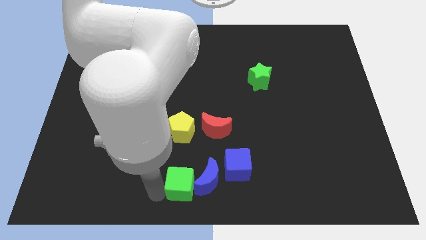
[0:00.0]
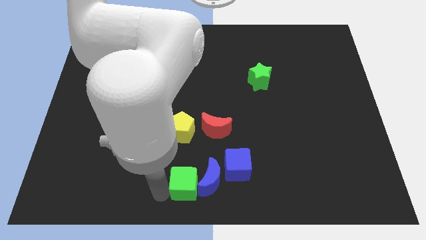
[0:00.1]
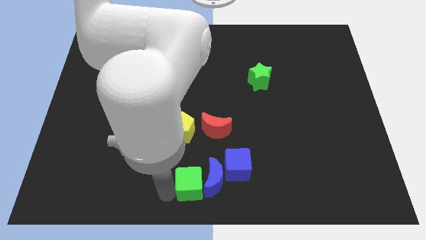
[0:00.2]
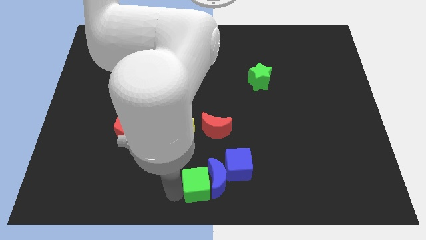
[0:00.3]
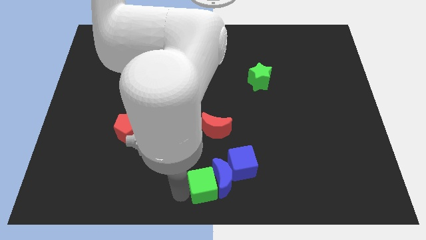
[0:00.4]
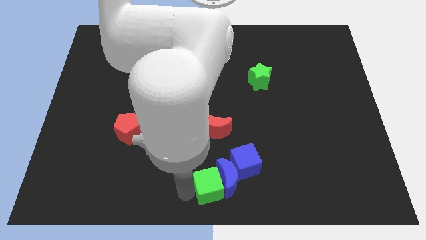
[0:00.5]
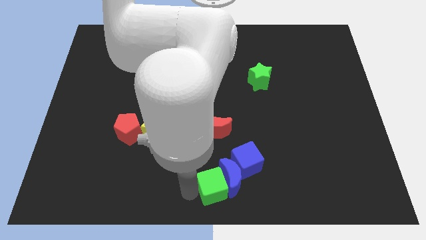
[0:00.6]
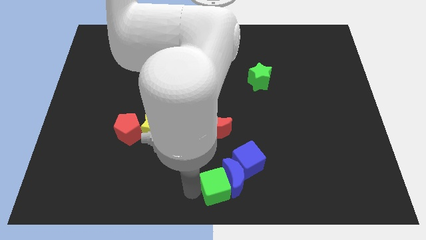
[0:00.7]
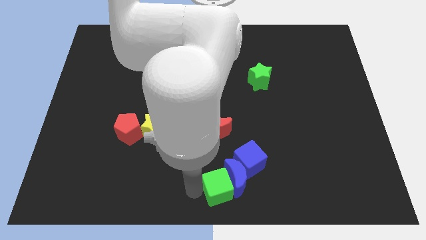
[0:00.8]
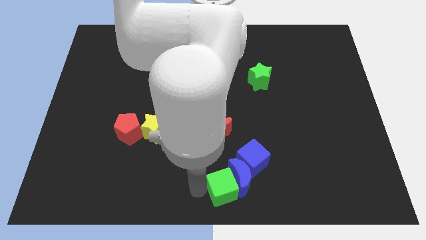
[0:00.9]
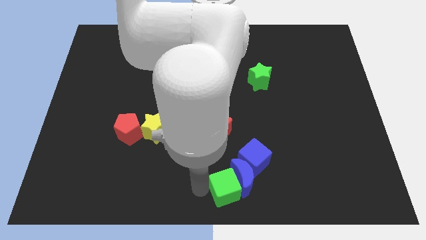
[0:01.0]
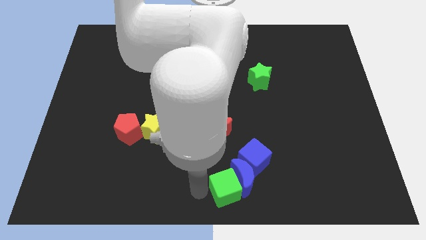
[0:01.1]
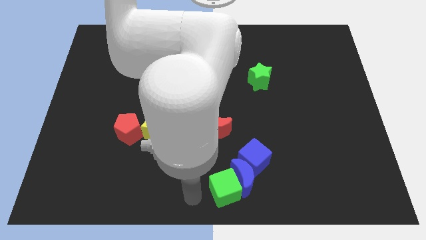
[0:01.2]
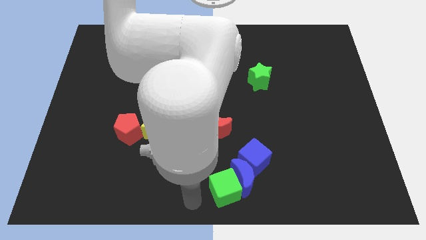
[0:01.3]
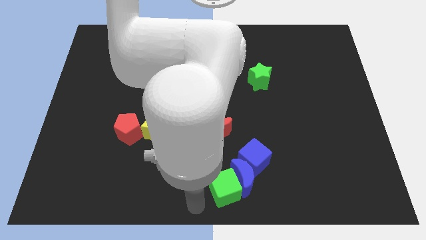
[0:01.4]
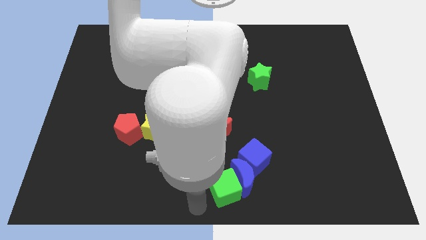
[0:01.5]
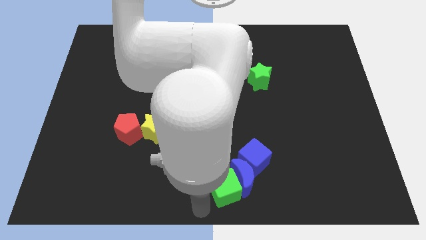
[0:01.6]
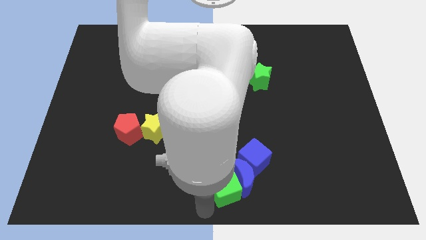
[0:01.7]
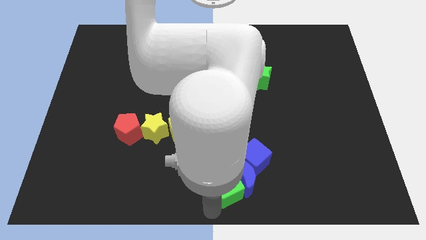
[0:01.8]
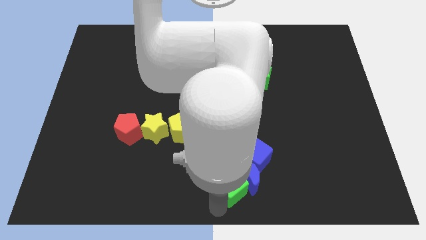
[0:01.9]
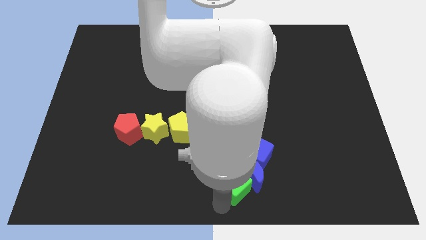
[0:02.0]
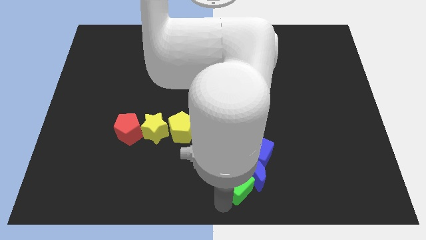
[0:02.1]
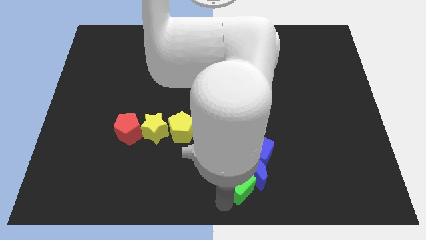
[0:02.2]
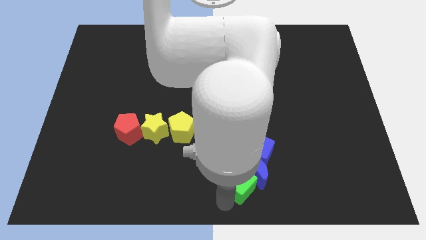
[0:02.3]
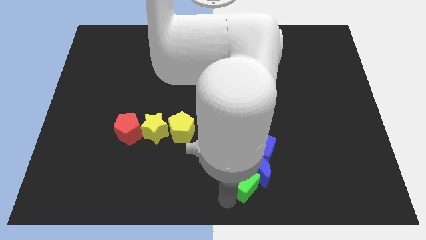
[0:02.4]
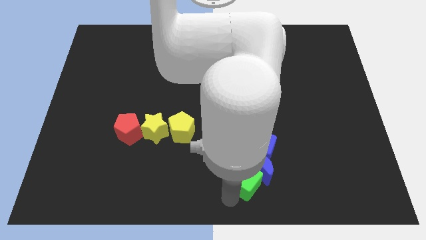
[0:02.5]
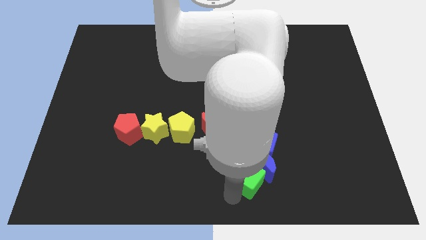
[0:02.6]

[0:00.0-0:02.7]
move green cube blue moonblue cube slightly up

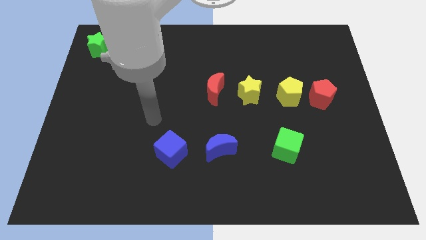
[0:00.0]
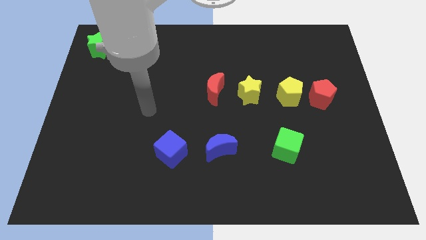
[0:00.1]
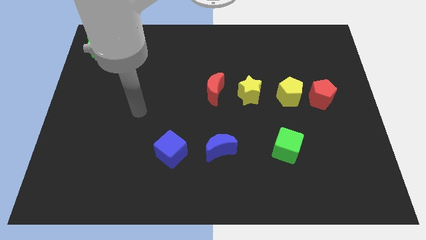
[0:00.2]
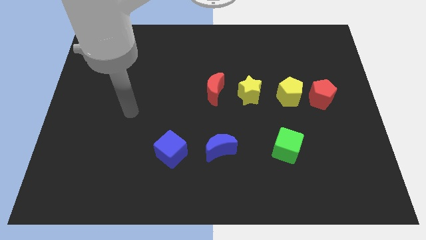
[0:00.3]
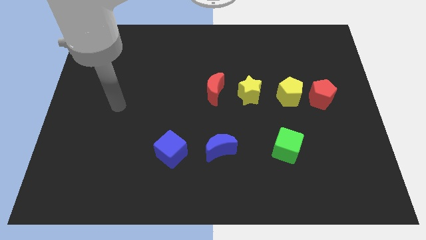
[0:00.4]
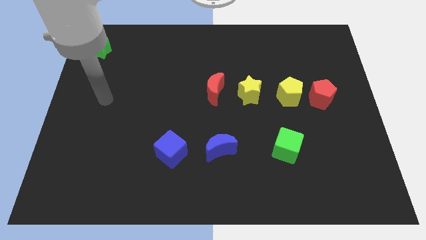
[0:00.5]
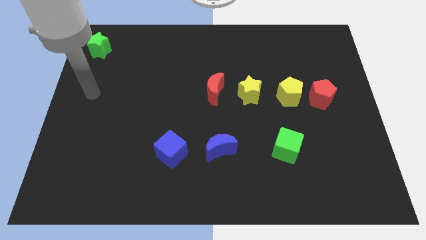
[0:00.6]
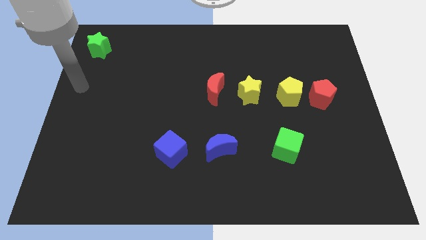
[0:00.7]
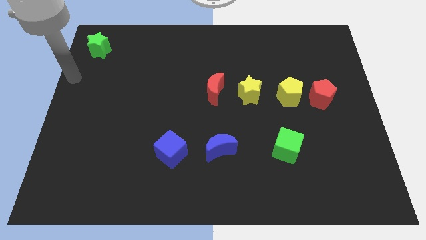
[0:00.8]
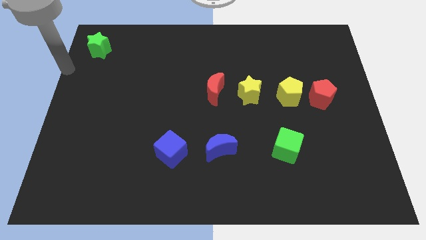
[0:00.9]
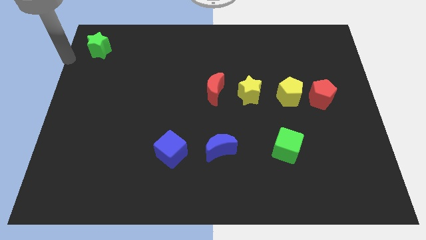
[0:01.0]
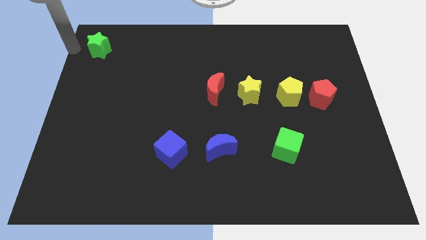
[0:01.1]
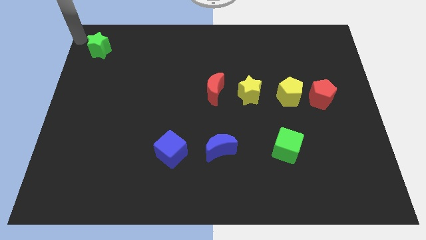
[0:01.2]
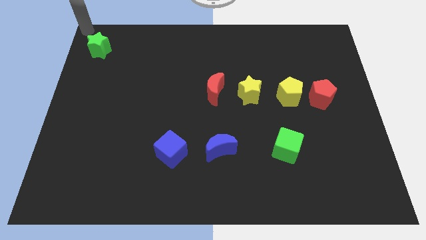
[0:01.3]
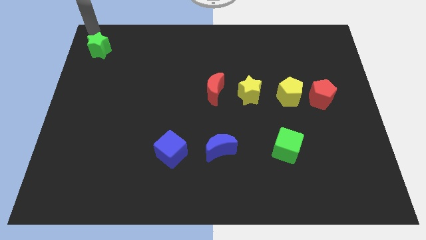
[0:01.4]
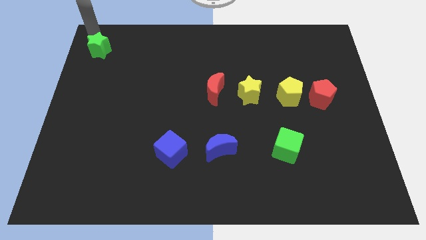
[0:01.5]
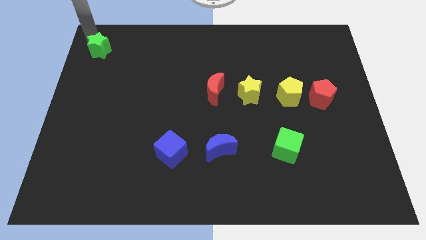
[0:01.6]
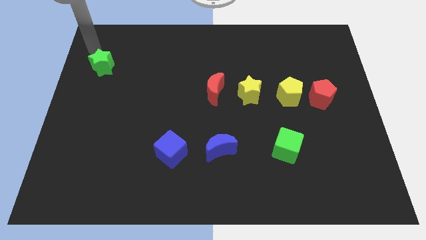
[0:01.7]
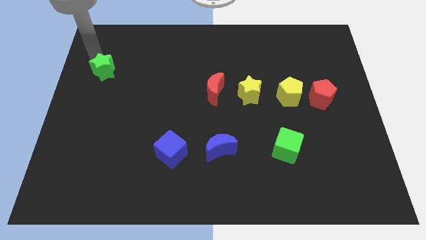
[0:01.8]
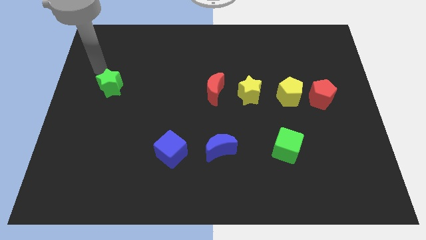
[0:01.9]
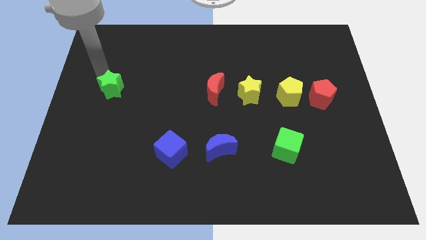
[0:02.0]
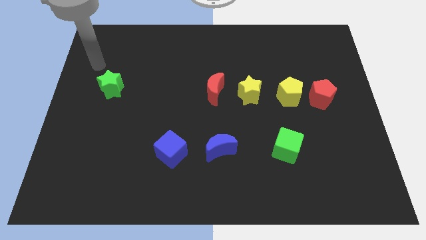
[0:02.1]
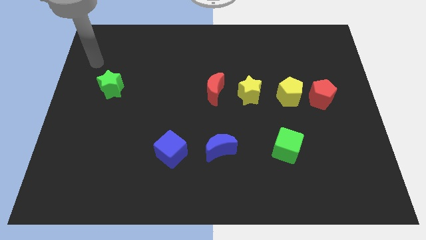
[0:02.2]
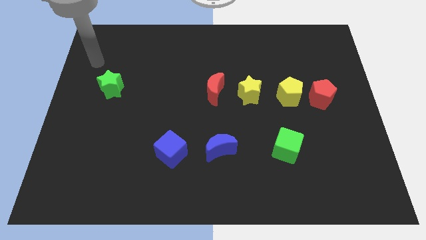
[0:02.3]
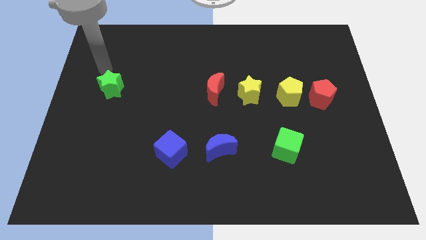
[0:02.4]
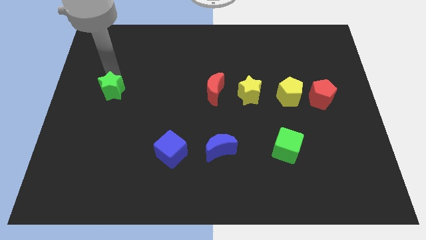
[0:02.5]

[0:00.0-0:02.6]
move the green star parallel to the left of the red moon

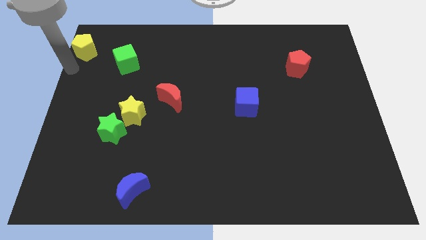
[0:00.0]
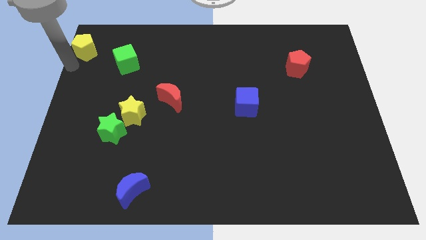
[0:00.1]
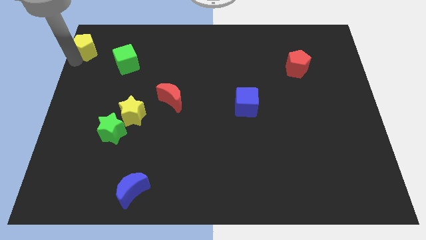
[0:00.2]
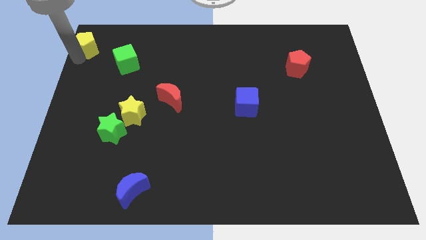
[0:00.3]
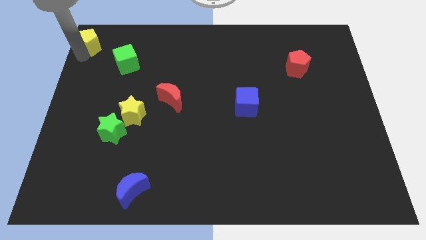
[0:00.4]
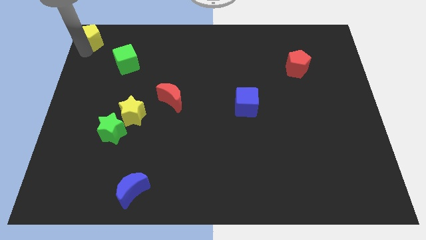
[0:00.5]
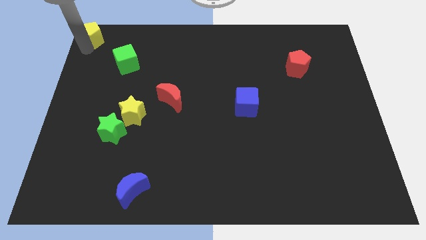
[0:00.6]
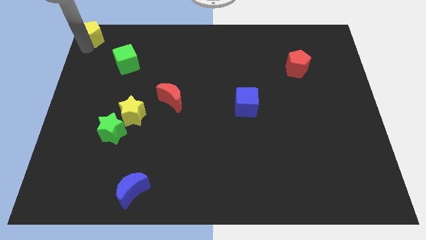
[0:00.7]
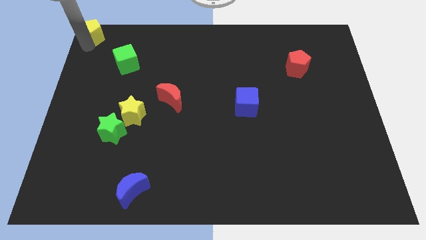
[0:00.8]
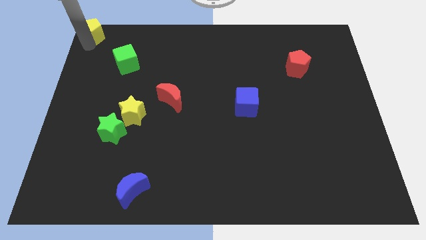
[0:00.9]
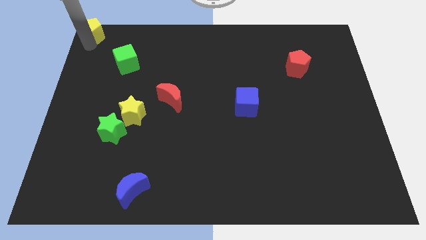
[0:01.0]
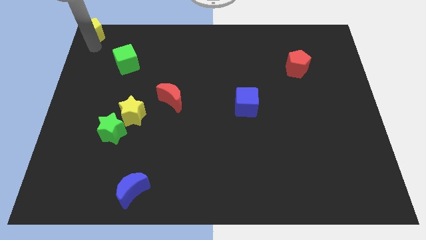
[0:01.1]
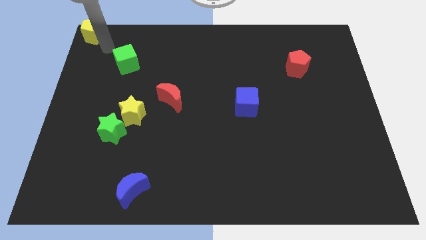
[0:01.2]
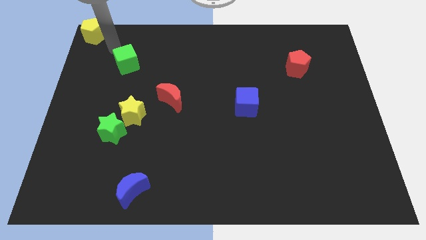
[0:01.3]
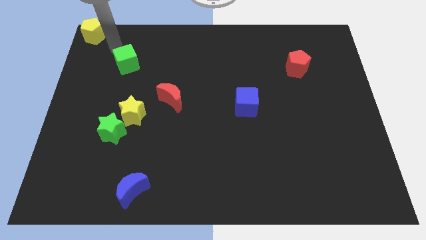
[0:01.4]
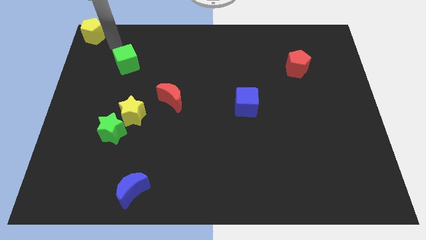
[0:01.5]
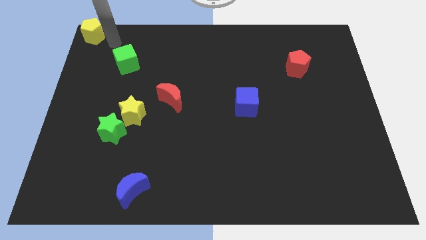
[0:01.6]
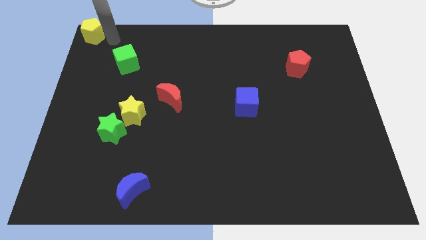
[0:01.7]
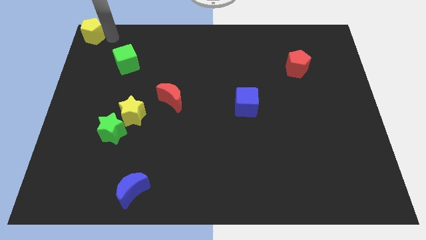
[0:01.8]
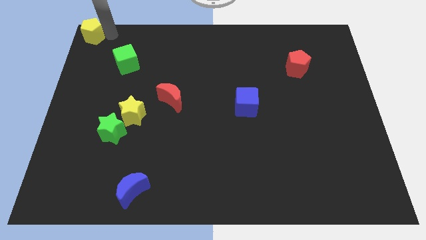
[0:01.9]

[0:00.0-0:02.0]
move the yellow pentagon at the top left corner of the board

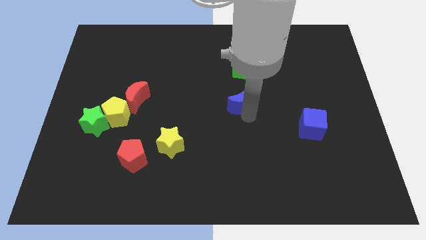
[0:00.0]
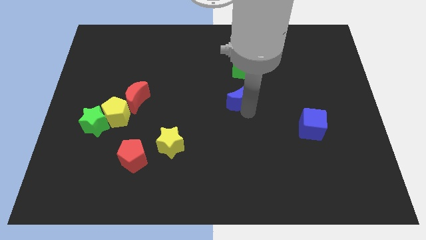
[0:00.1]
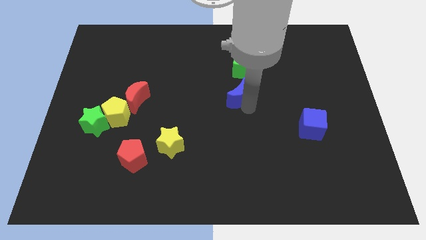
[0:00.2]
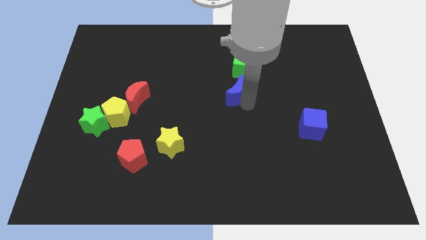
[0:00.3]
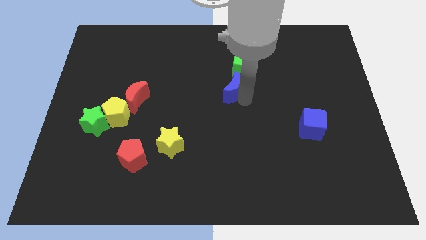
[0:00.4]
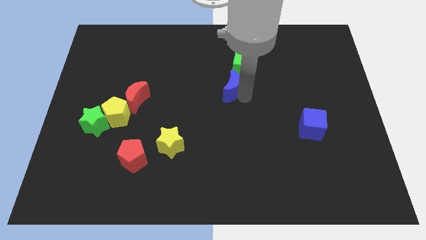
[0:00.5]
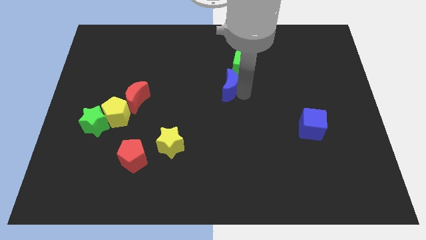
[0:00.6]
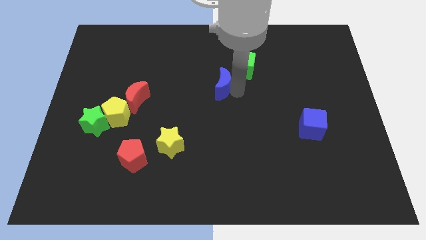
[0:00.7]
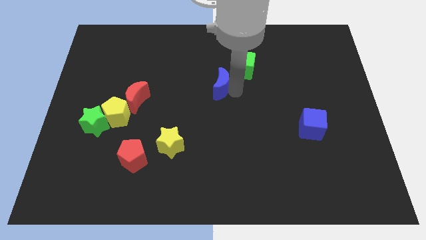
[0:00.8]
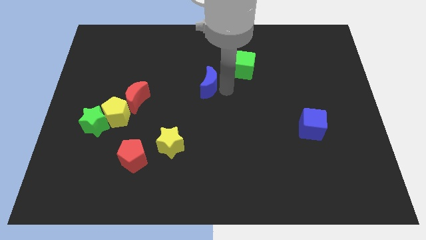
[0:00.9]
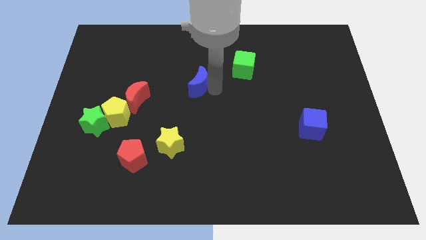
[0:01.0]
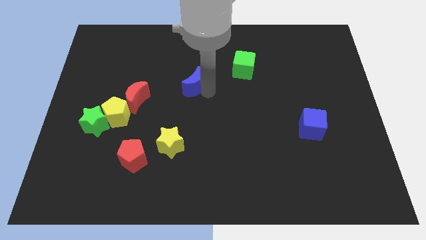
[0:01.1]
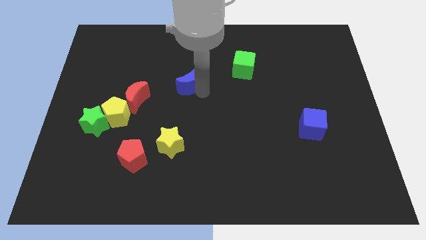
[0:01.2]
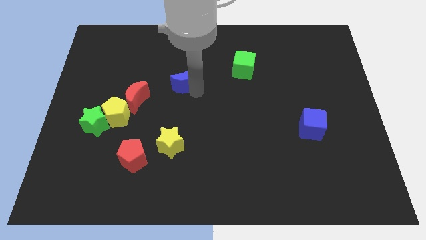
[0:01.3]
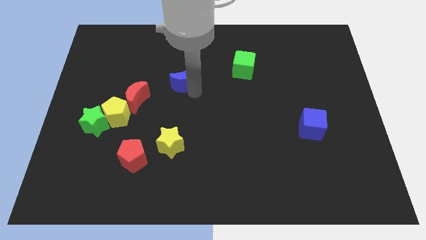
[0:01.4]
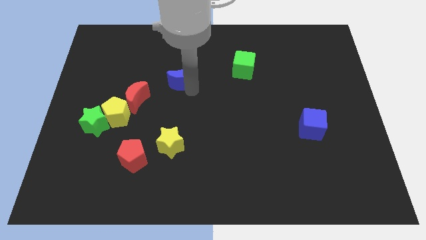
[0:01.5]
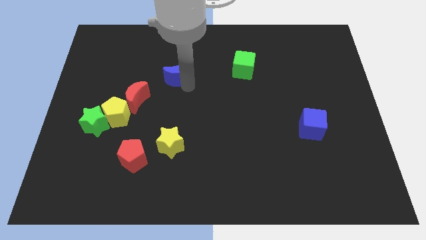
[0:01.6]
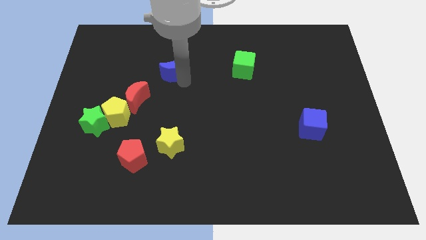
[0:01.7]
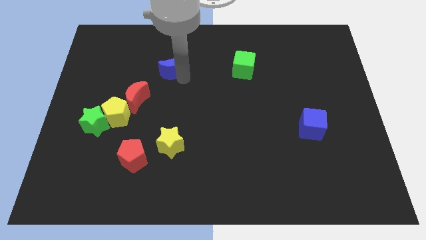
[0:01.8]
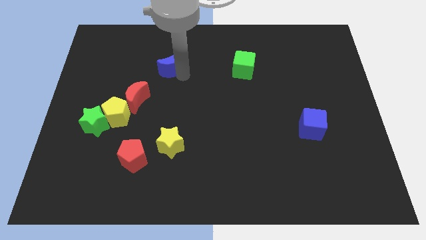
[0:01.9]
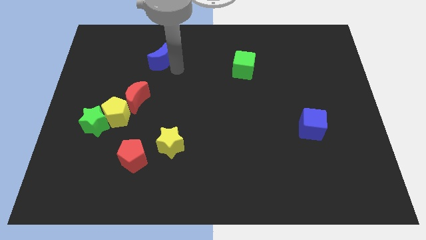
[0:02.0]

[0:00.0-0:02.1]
push the blue crescent to the left of the green cube
